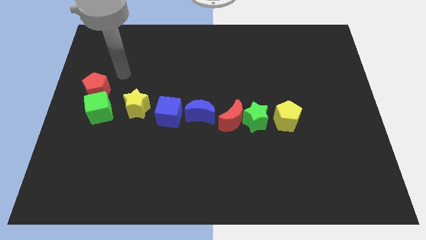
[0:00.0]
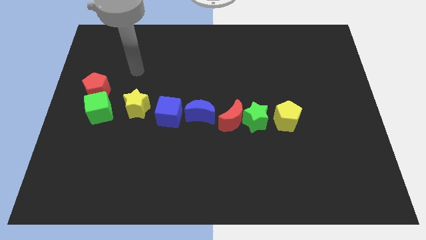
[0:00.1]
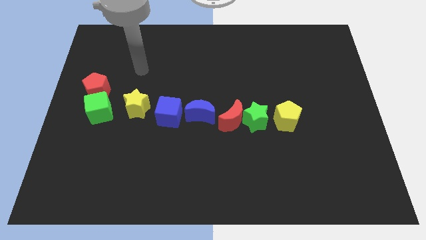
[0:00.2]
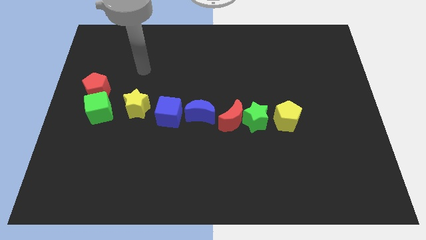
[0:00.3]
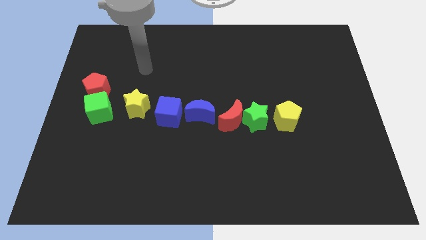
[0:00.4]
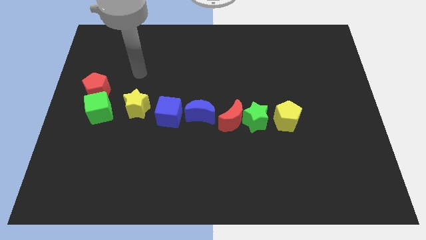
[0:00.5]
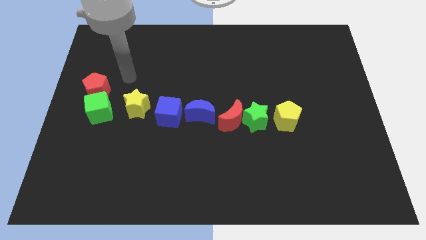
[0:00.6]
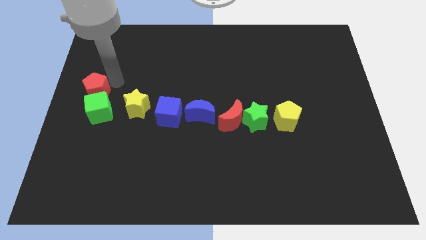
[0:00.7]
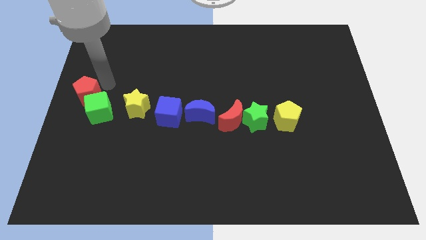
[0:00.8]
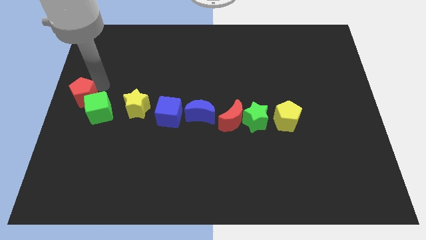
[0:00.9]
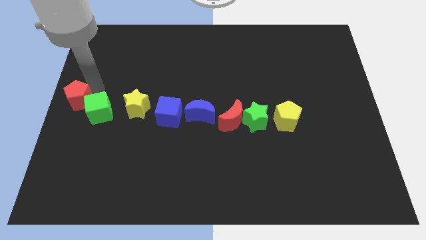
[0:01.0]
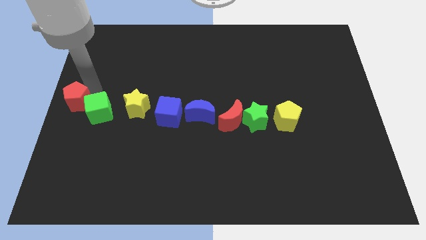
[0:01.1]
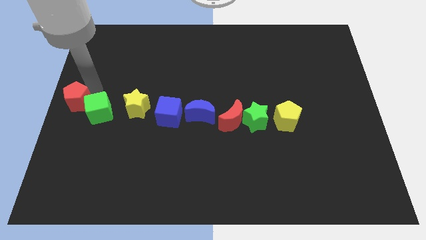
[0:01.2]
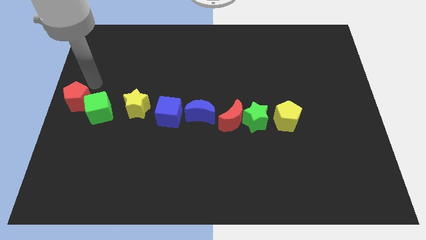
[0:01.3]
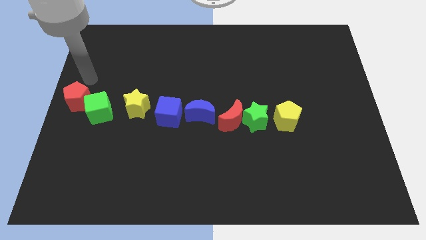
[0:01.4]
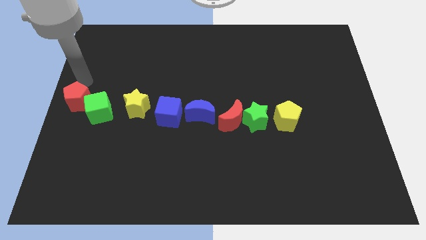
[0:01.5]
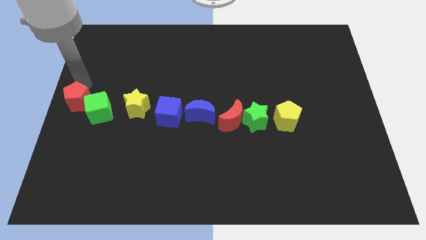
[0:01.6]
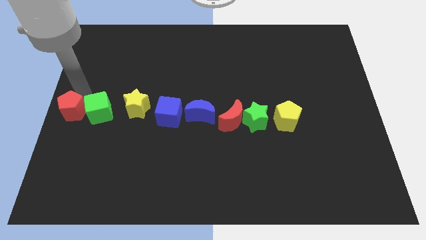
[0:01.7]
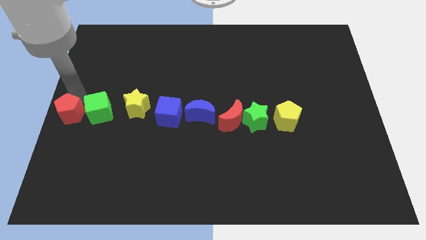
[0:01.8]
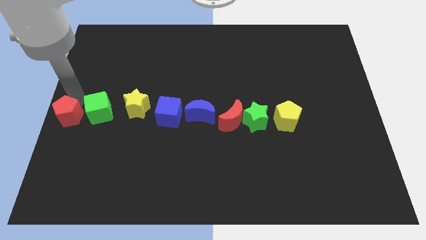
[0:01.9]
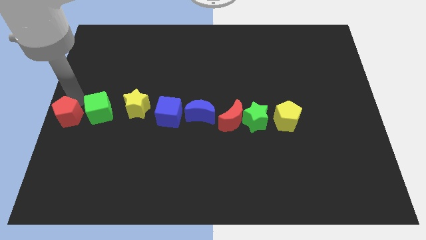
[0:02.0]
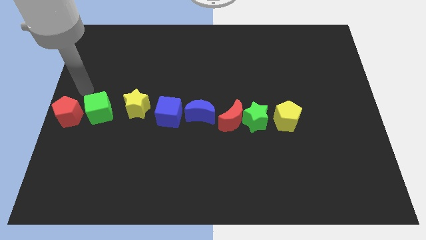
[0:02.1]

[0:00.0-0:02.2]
place the red pentagon to the left of the green cube

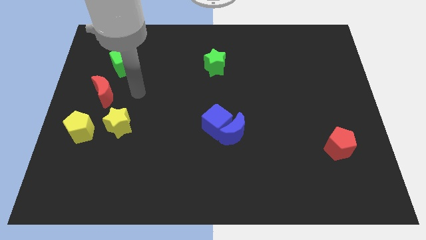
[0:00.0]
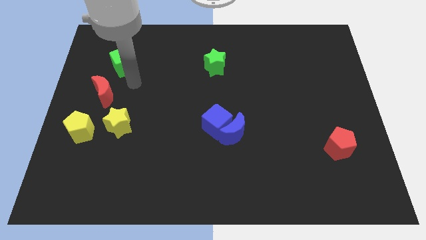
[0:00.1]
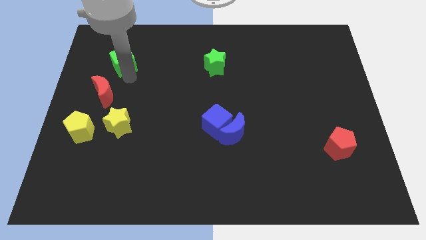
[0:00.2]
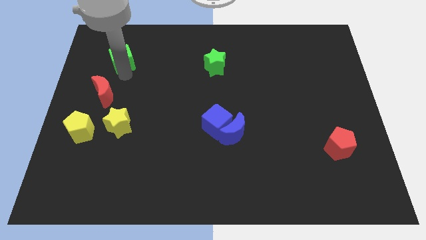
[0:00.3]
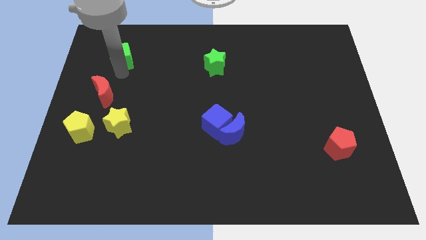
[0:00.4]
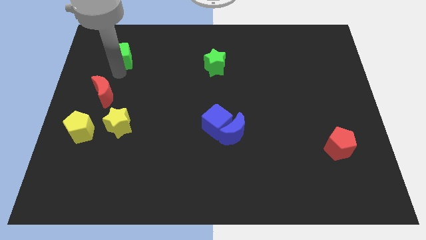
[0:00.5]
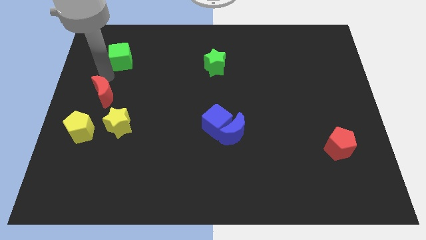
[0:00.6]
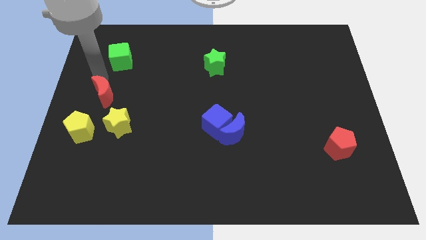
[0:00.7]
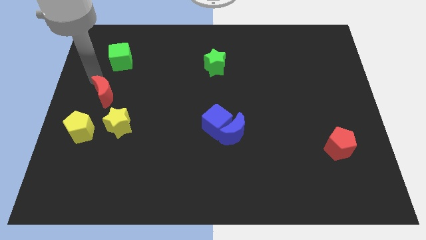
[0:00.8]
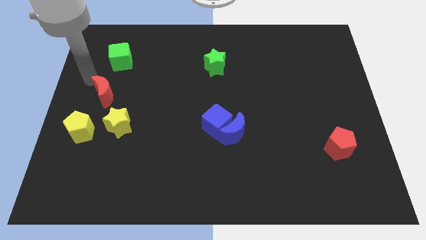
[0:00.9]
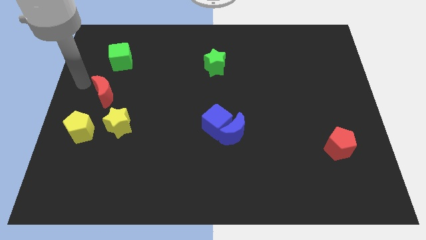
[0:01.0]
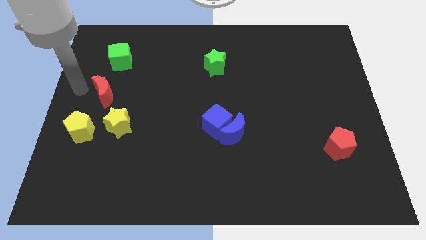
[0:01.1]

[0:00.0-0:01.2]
push the green cube slightly

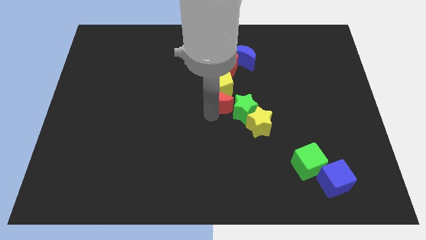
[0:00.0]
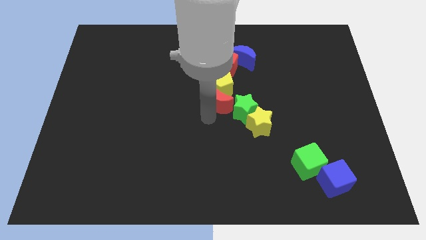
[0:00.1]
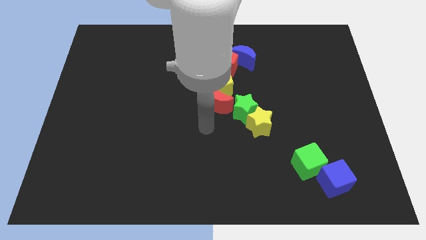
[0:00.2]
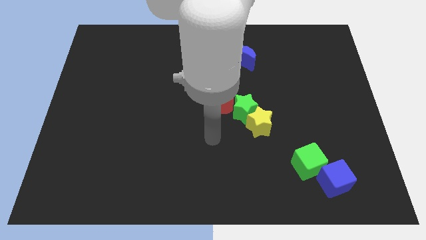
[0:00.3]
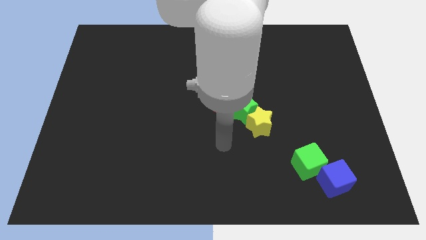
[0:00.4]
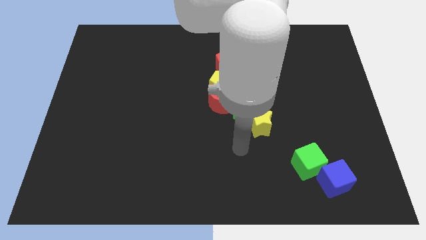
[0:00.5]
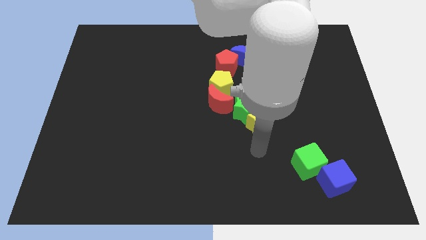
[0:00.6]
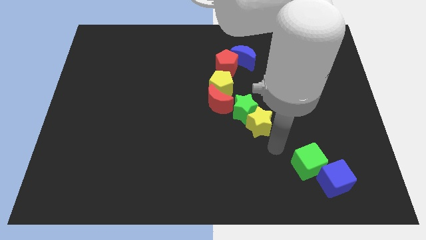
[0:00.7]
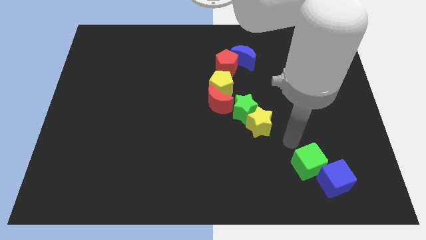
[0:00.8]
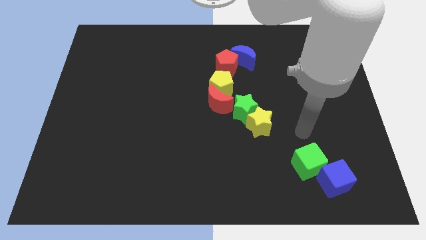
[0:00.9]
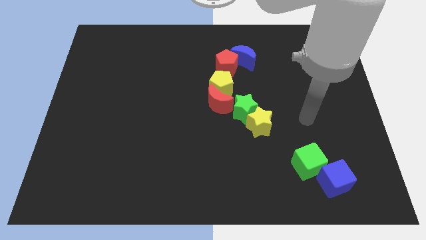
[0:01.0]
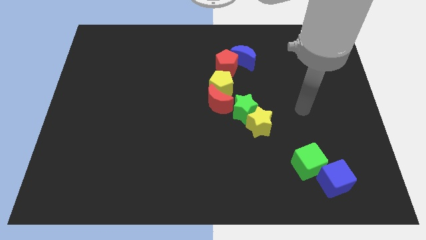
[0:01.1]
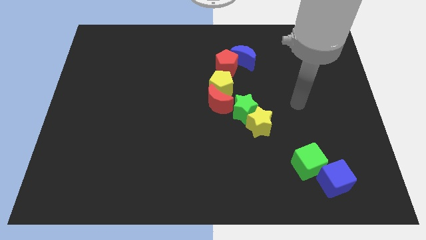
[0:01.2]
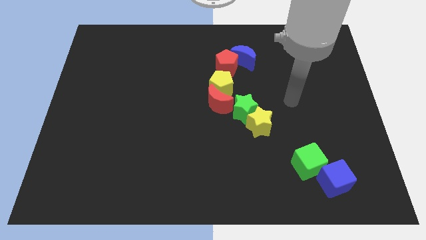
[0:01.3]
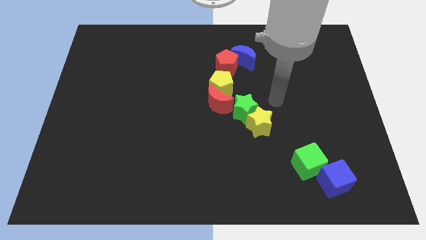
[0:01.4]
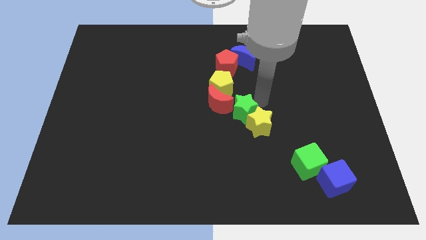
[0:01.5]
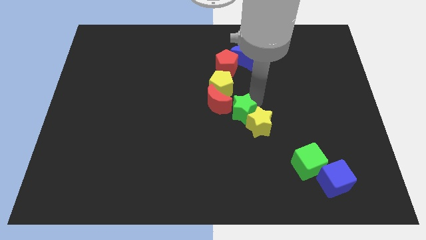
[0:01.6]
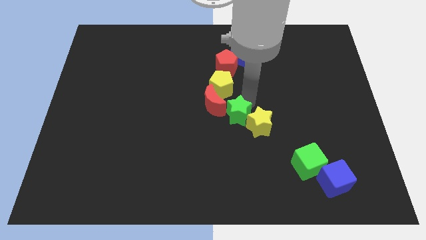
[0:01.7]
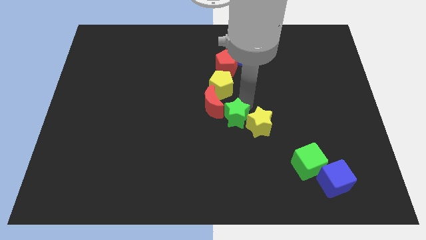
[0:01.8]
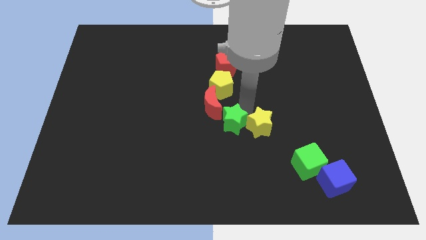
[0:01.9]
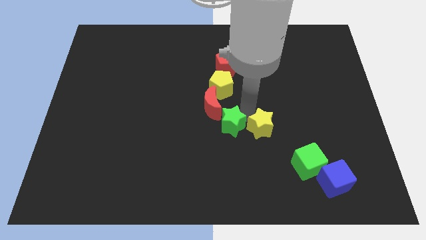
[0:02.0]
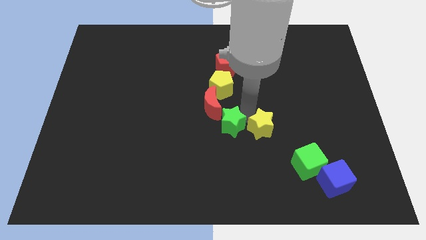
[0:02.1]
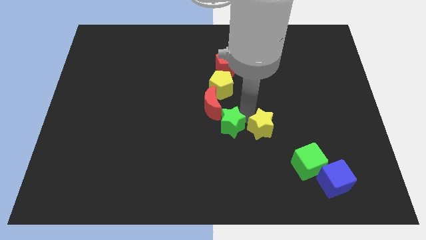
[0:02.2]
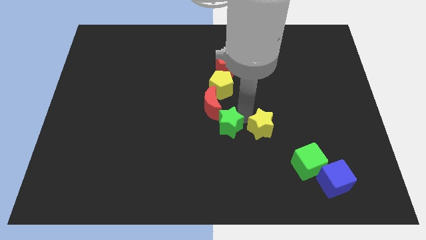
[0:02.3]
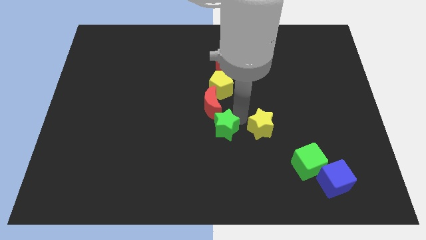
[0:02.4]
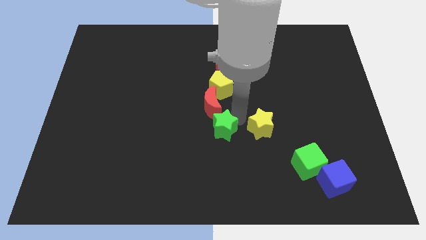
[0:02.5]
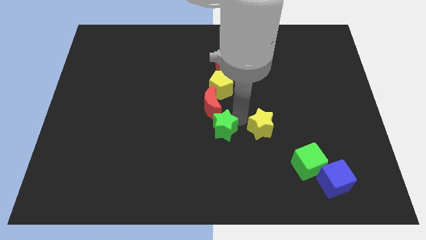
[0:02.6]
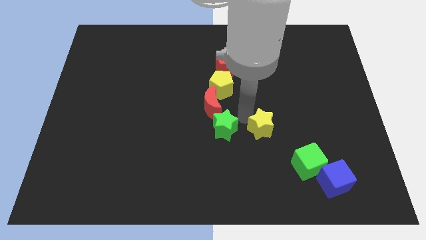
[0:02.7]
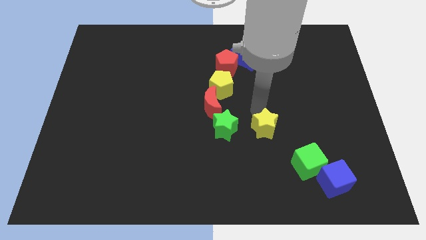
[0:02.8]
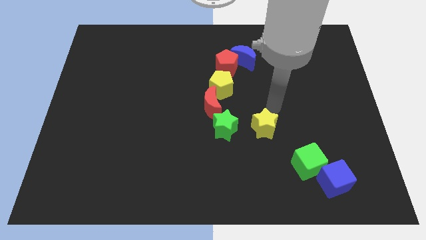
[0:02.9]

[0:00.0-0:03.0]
slightly push the stars and red moon towards the left side of the board

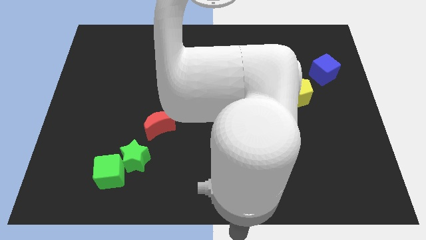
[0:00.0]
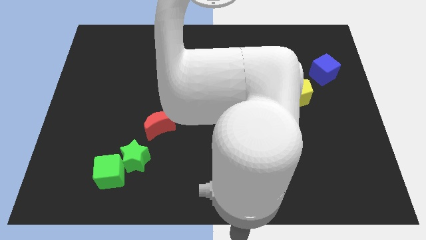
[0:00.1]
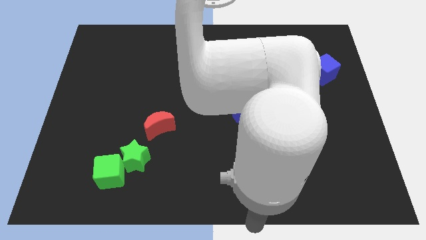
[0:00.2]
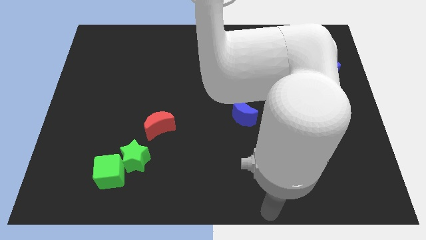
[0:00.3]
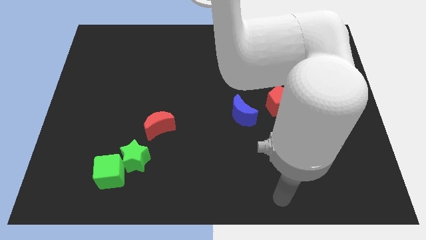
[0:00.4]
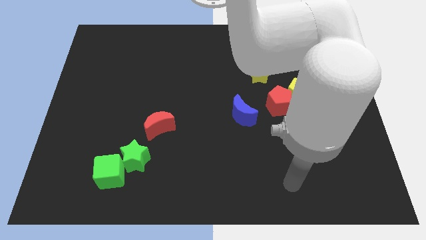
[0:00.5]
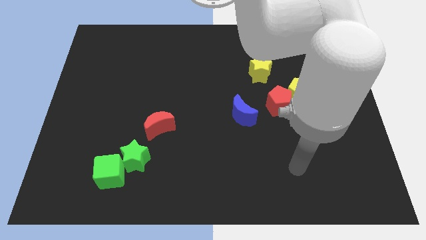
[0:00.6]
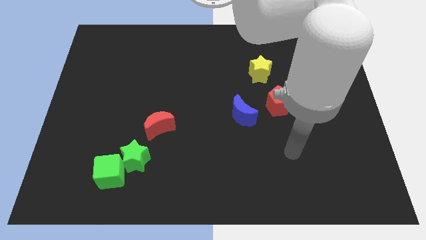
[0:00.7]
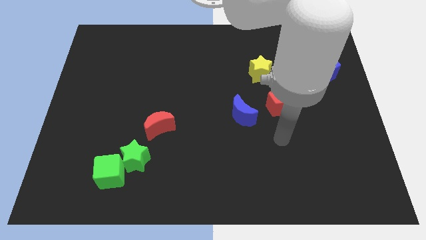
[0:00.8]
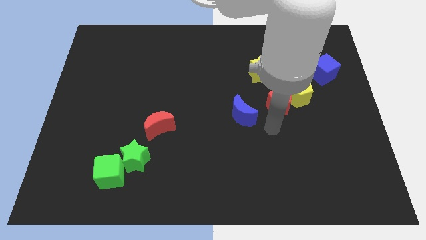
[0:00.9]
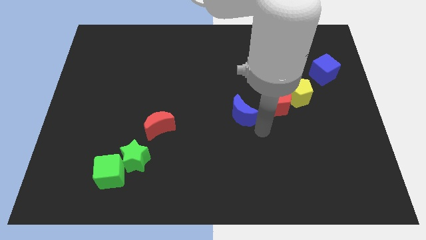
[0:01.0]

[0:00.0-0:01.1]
place your arm at the bottom of the blue crescent

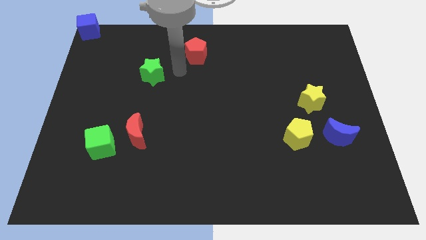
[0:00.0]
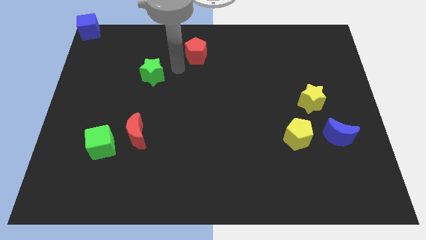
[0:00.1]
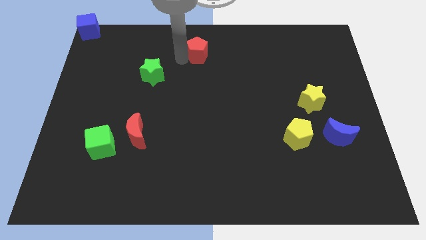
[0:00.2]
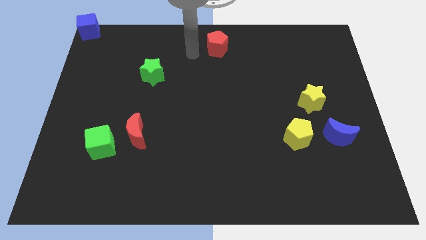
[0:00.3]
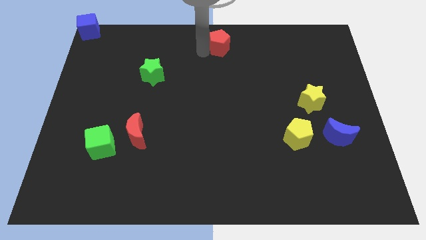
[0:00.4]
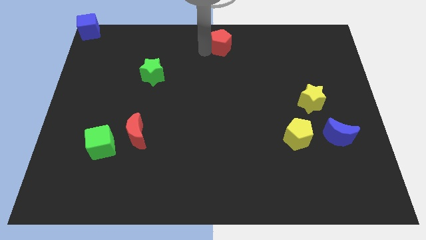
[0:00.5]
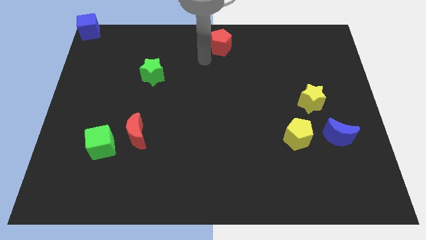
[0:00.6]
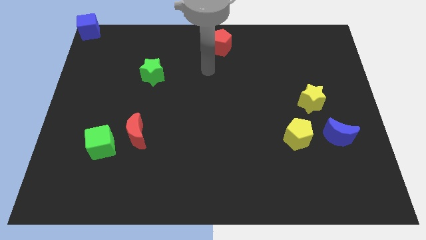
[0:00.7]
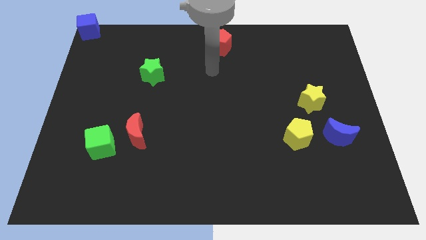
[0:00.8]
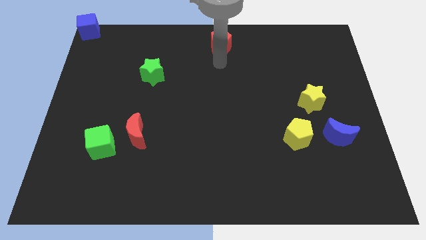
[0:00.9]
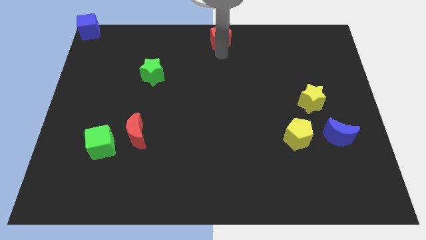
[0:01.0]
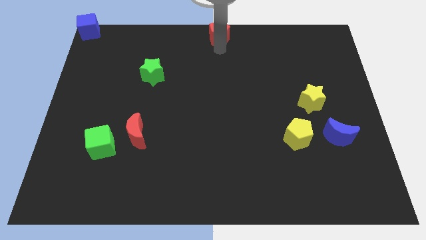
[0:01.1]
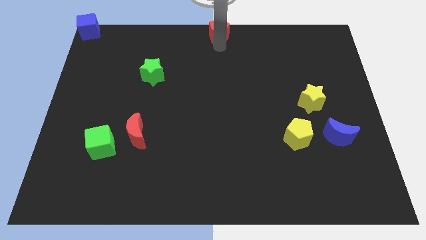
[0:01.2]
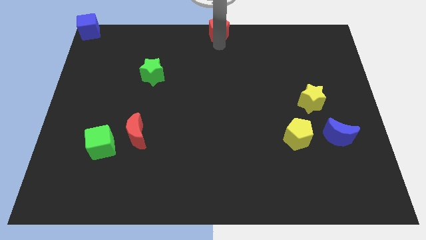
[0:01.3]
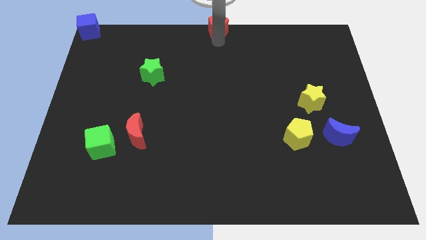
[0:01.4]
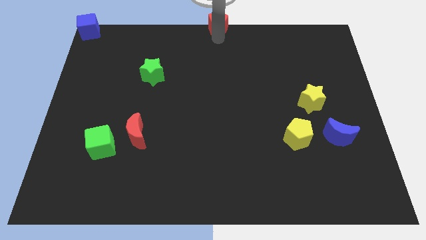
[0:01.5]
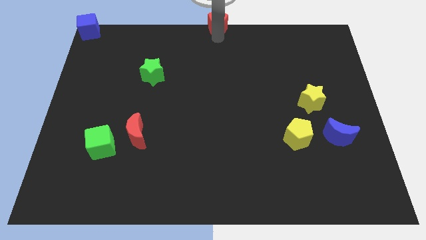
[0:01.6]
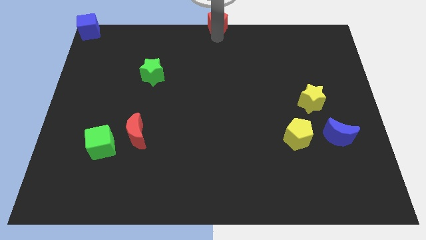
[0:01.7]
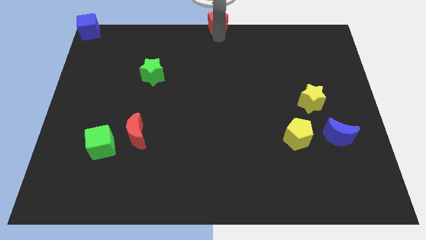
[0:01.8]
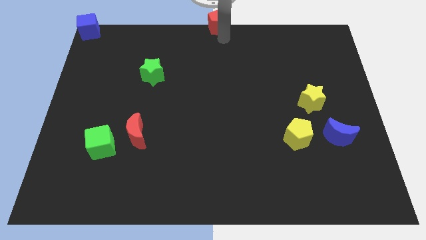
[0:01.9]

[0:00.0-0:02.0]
push the red pentagon at the top center of the board
